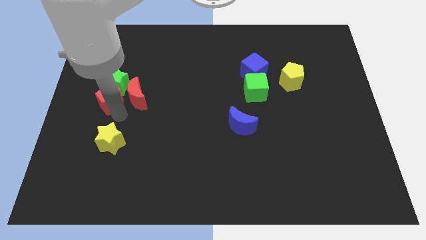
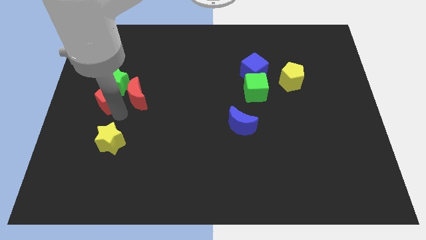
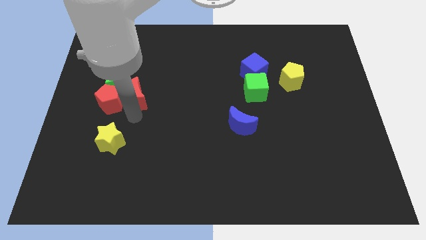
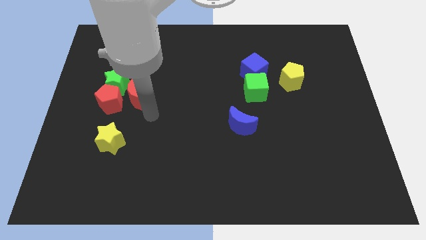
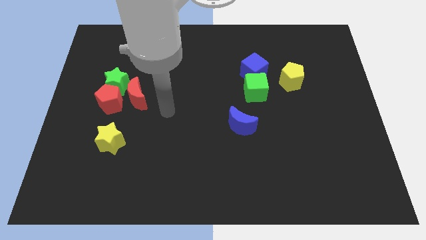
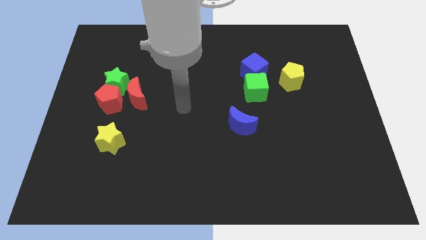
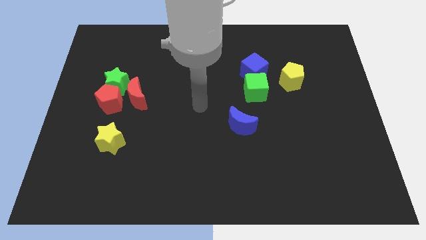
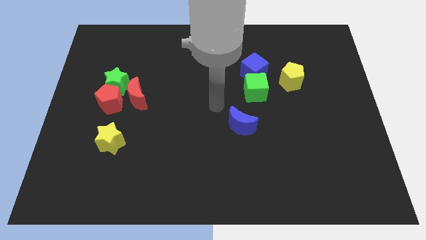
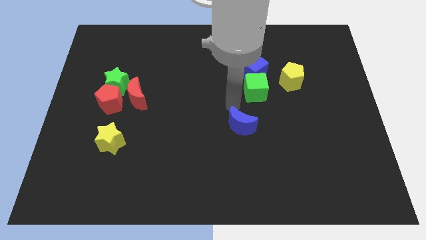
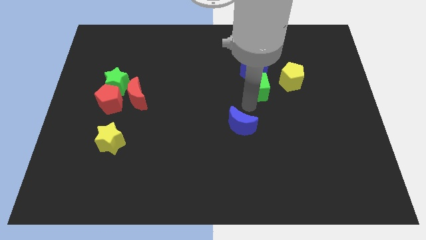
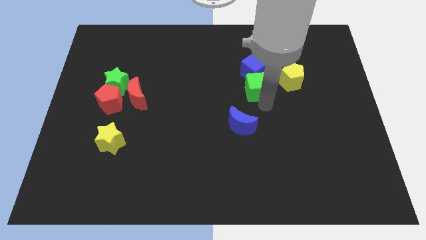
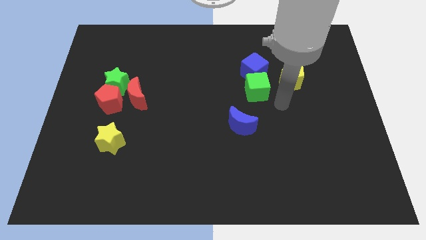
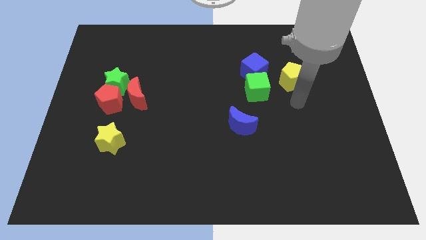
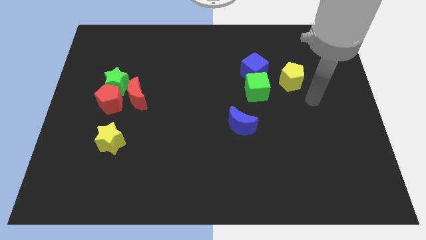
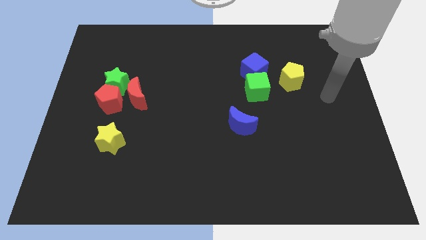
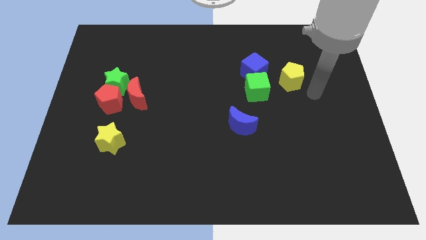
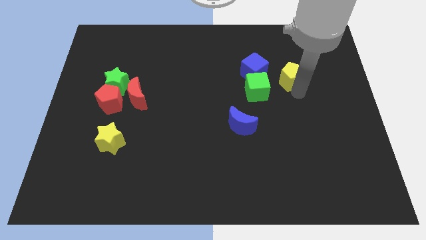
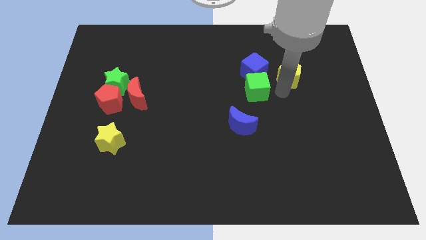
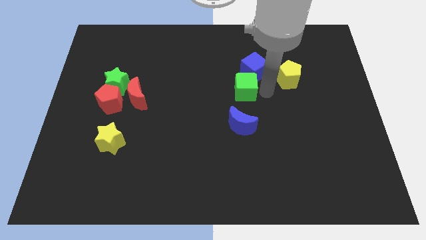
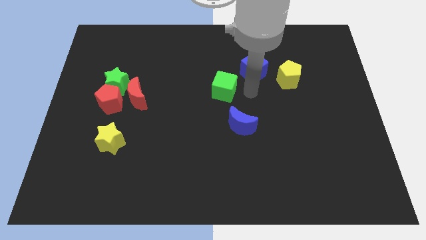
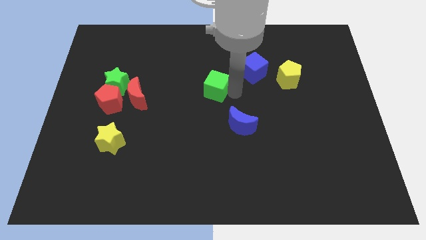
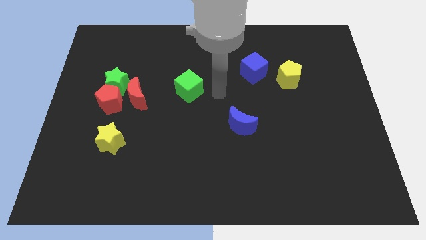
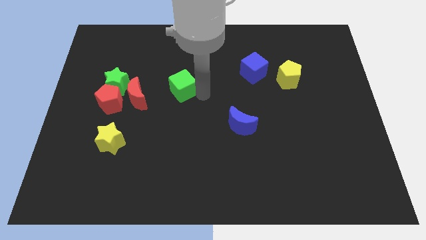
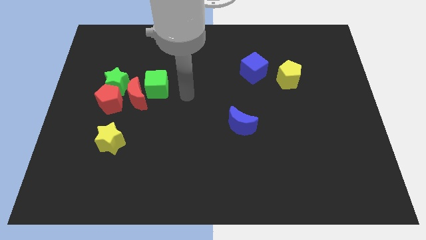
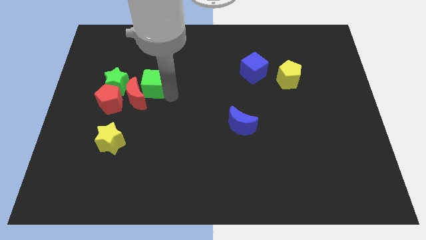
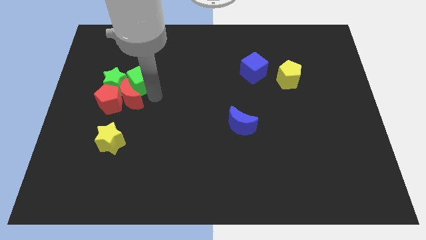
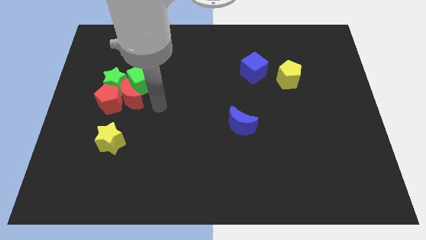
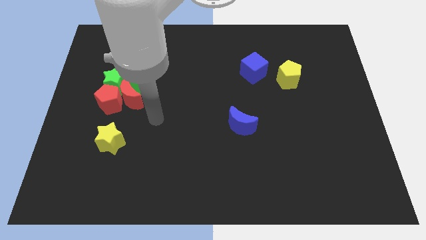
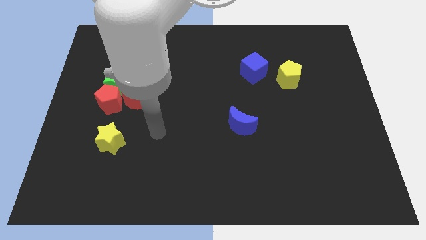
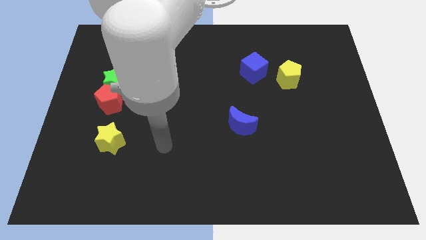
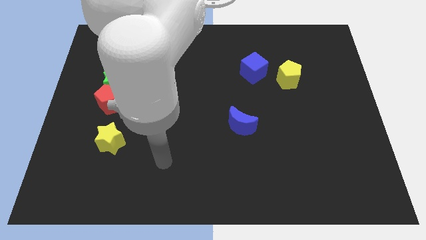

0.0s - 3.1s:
push the green cube in to right of the red crescent

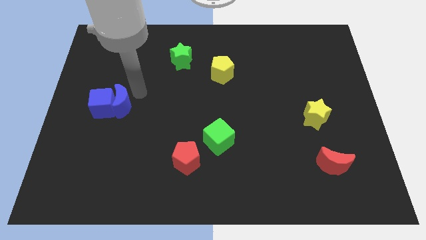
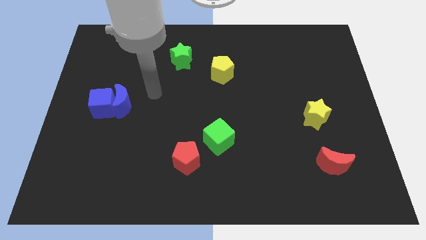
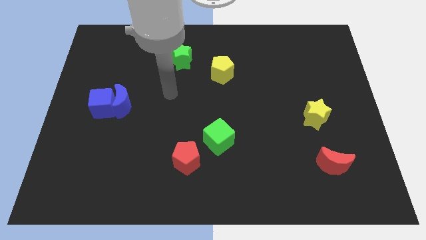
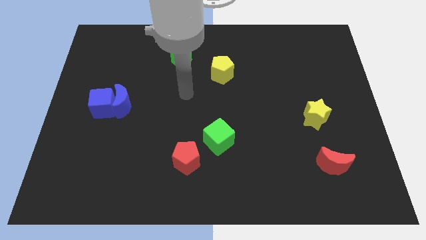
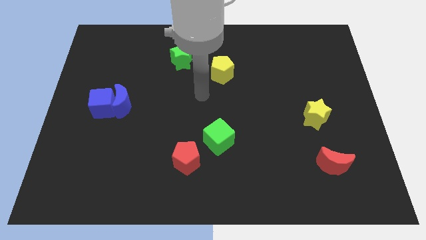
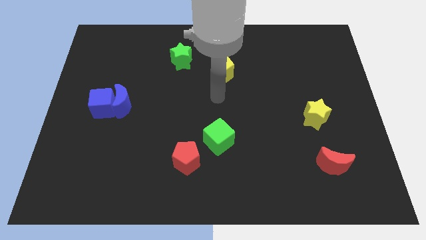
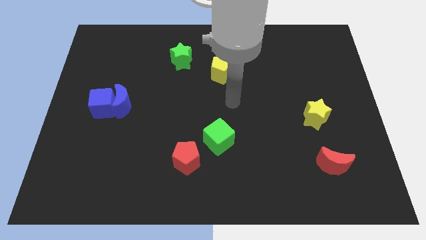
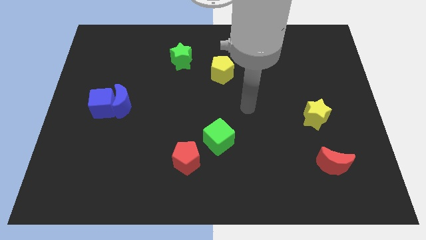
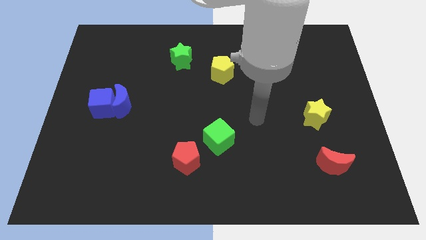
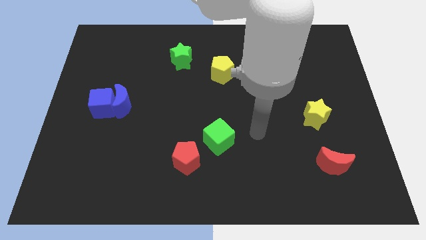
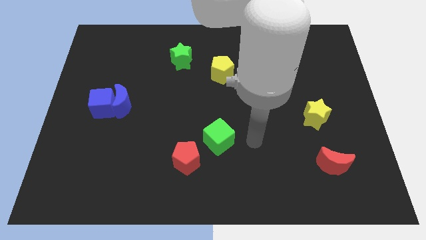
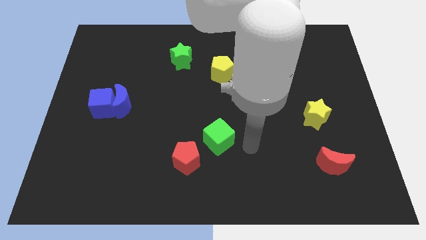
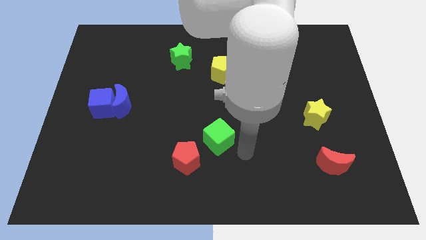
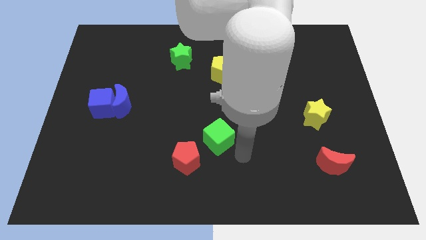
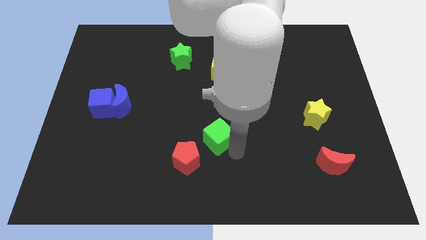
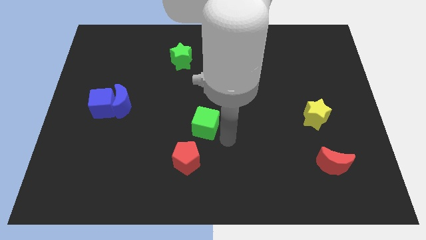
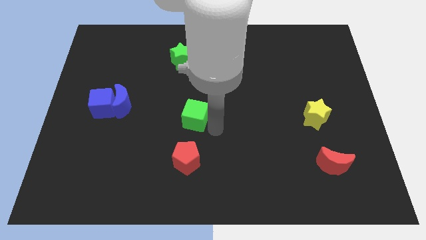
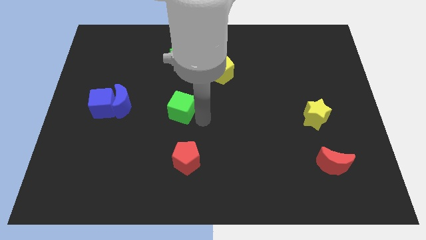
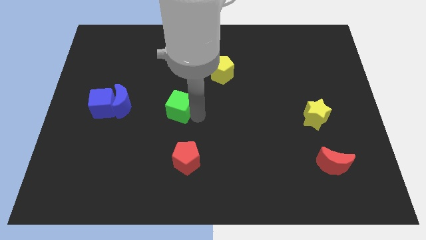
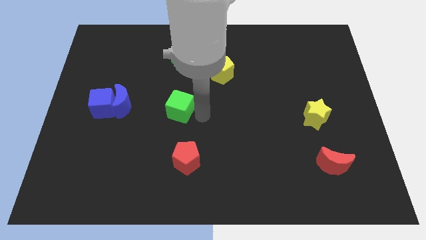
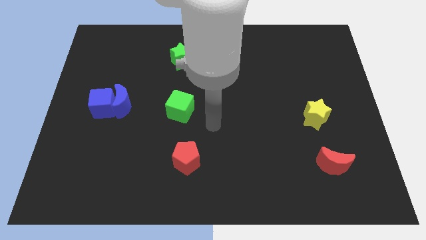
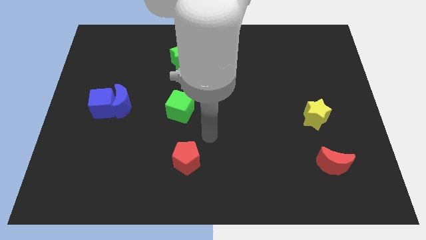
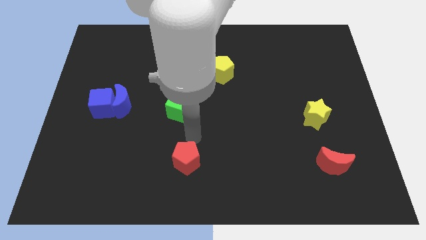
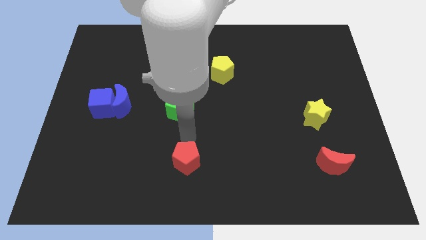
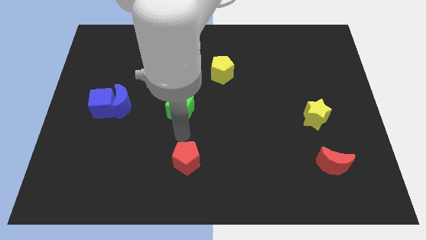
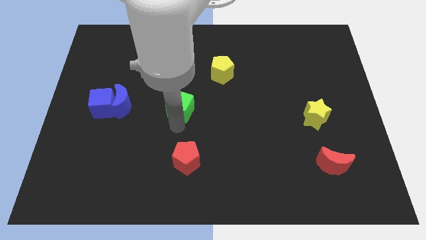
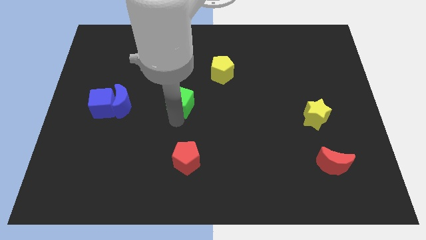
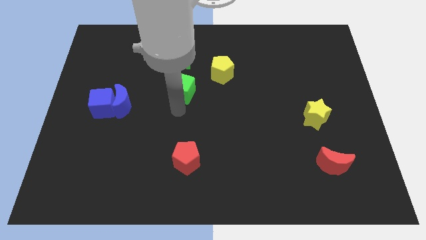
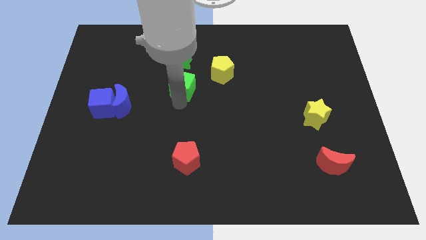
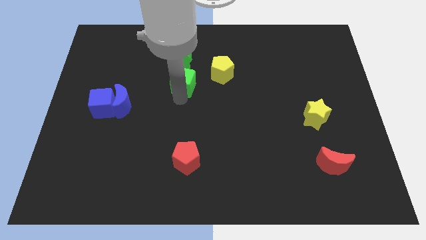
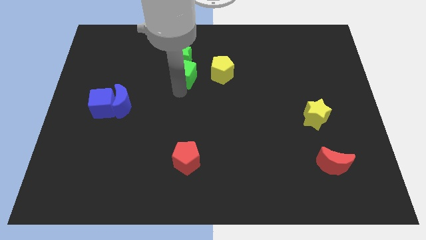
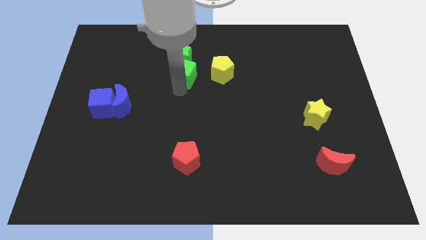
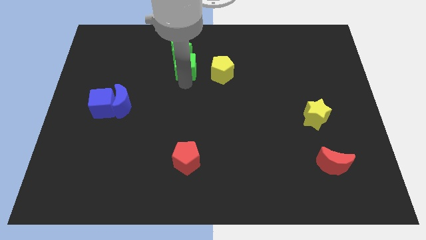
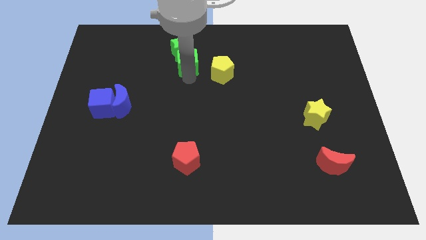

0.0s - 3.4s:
push the green cube into the green star

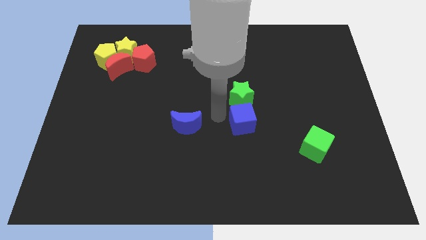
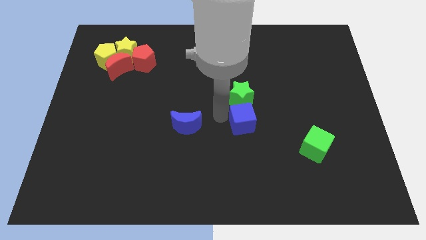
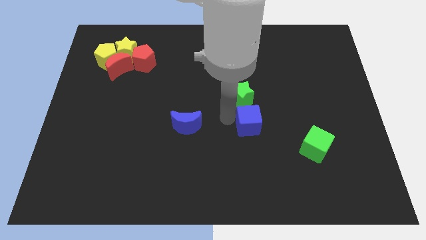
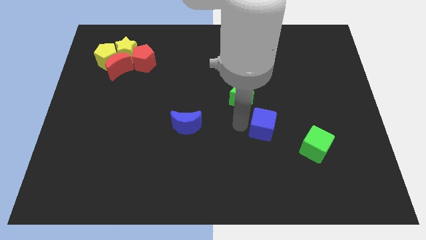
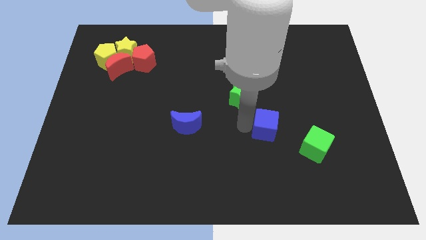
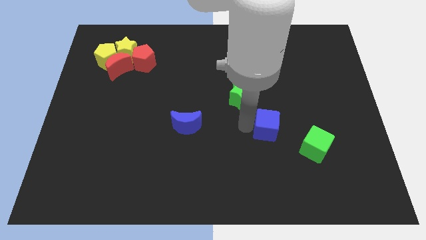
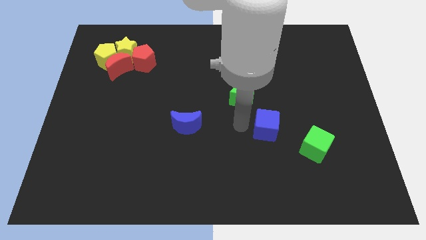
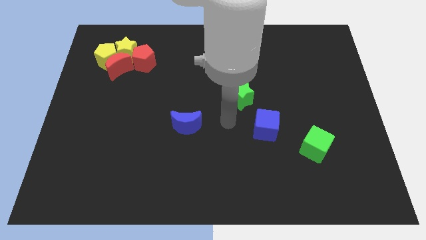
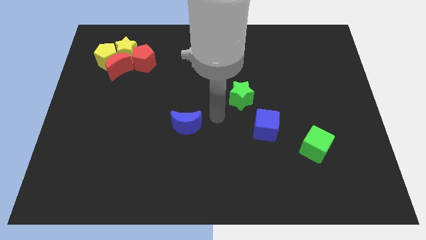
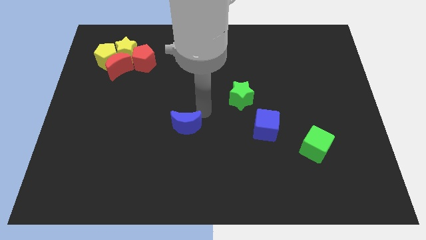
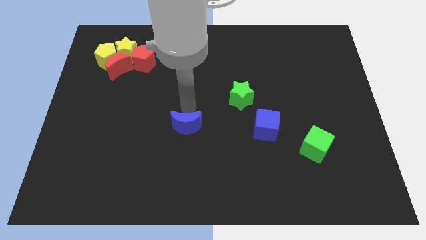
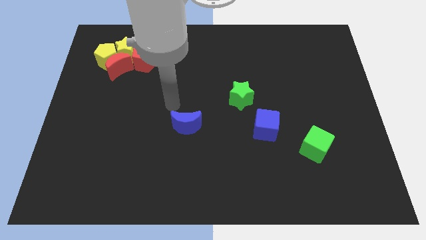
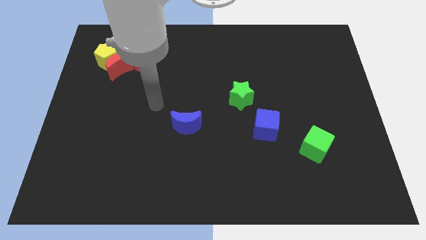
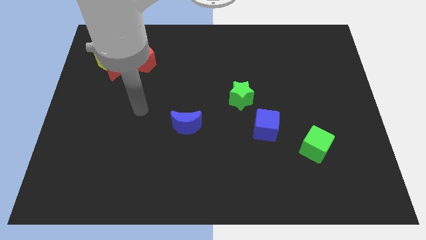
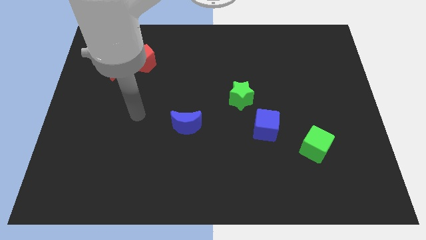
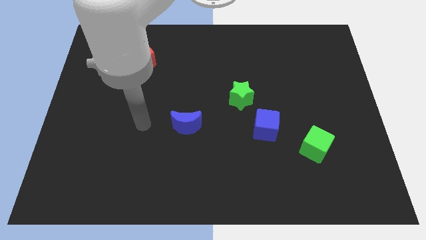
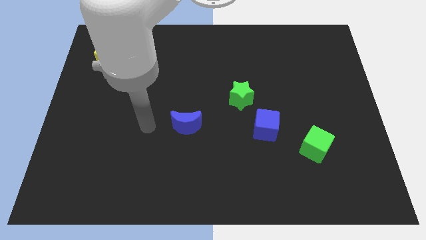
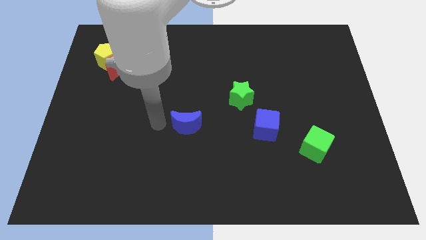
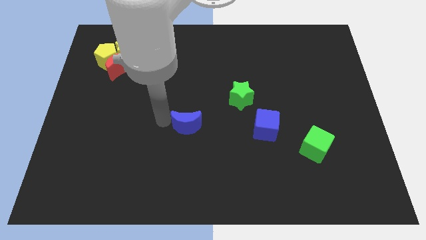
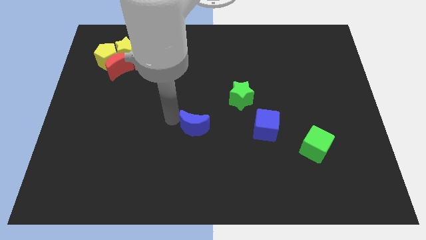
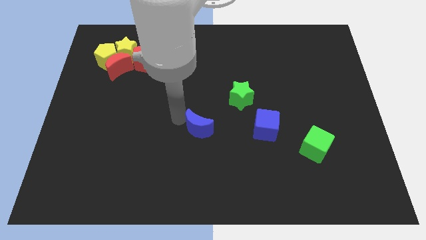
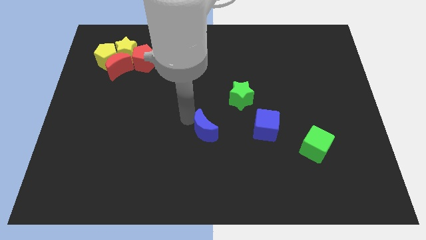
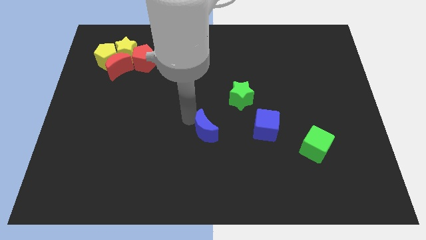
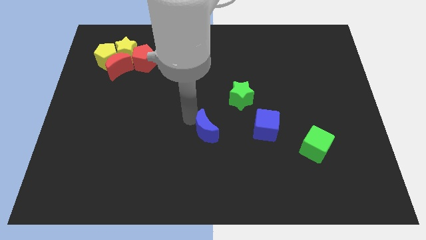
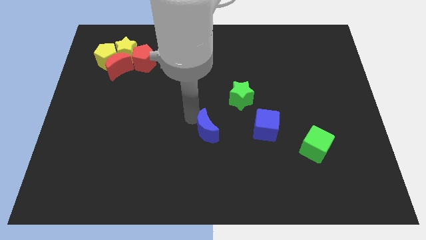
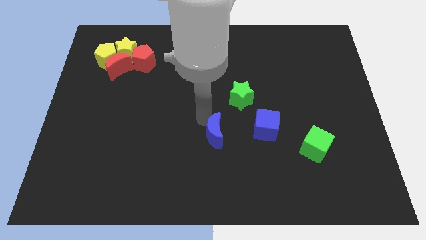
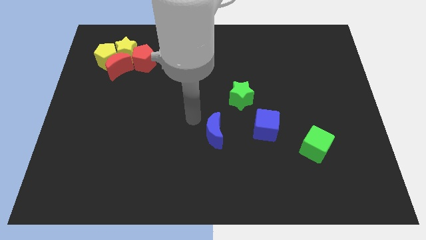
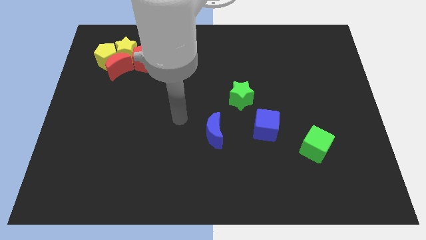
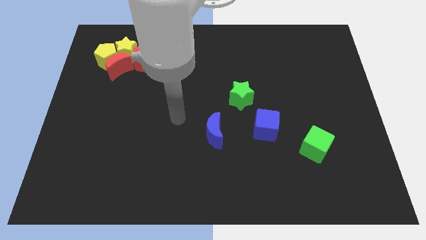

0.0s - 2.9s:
push blue moon towards right side of the board
